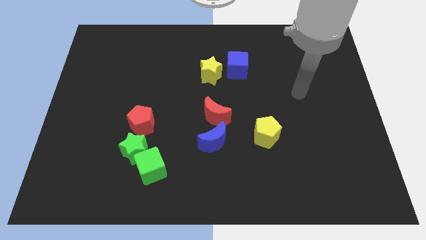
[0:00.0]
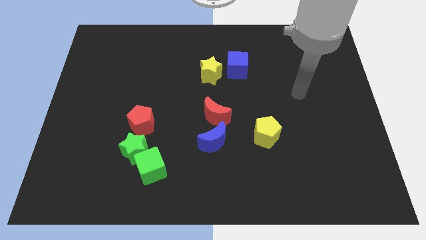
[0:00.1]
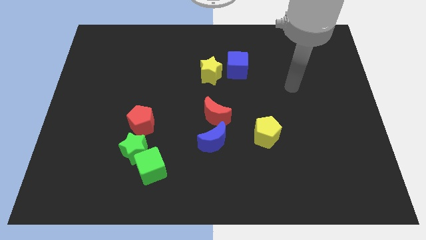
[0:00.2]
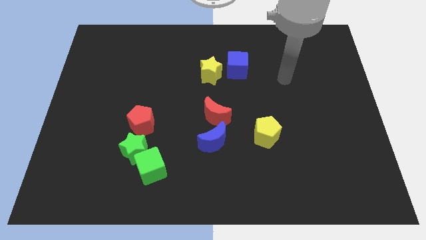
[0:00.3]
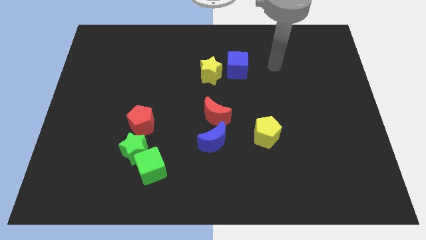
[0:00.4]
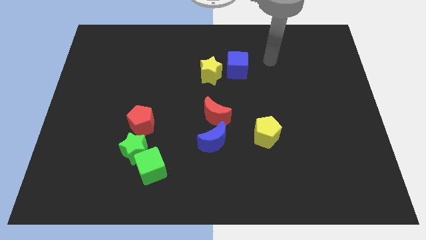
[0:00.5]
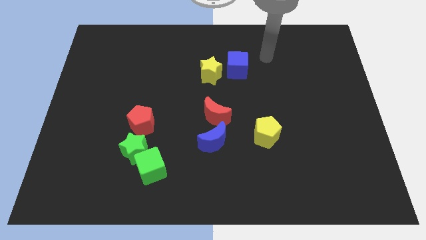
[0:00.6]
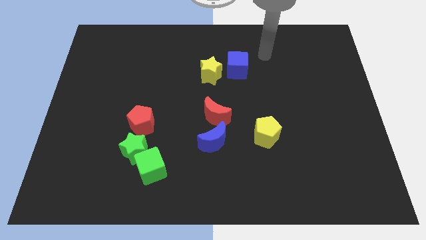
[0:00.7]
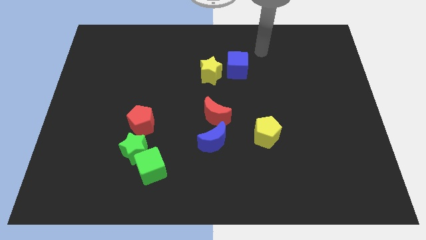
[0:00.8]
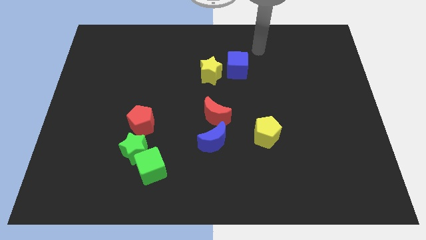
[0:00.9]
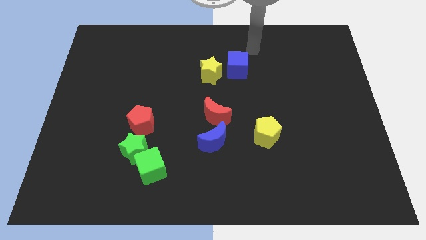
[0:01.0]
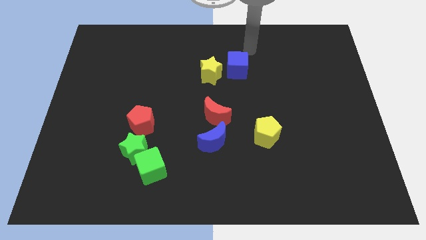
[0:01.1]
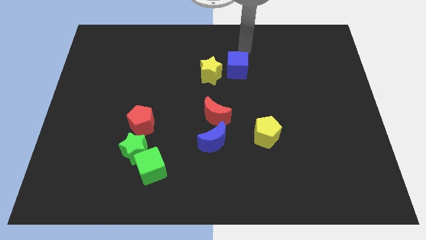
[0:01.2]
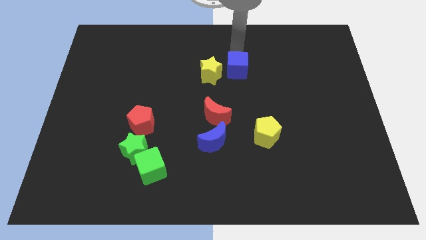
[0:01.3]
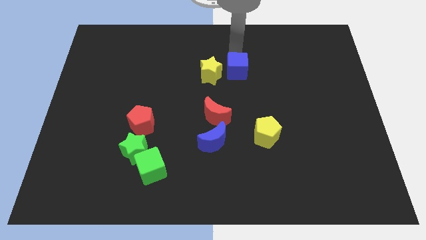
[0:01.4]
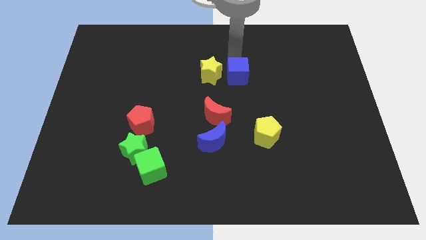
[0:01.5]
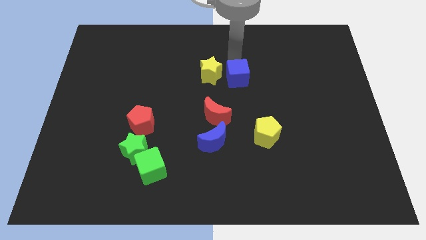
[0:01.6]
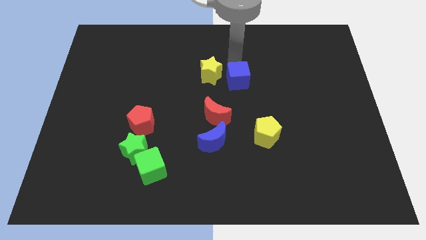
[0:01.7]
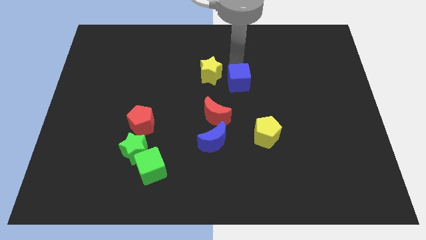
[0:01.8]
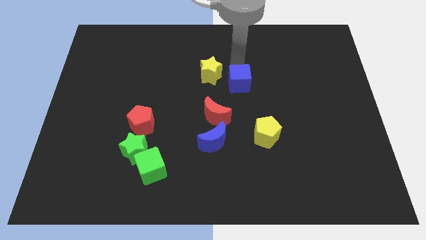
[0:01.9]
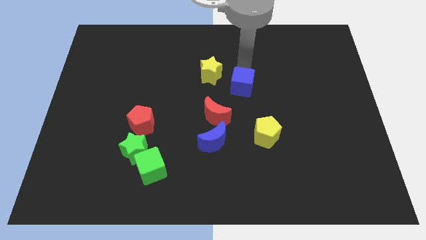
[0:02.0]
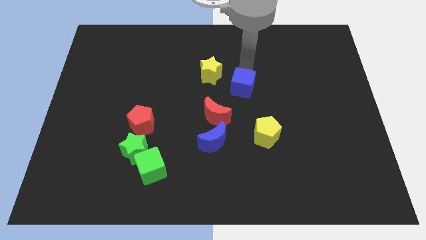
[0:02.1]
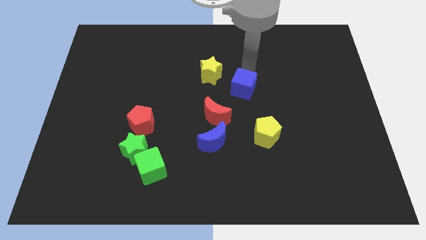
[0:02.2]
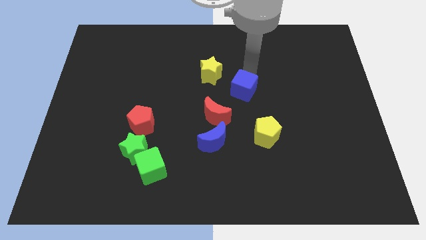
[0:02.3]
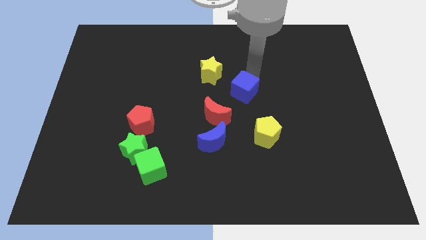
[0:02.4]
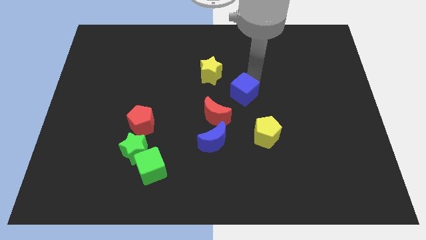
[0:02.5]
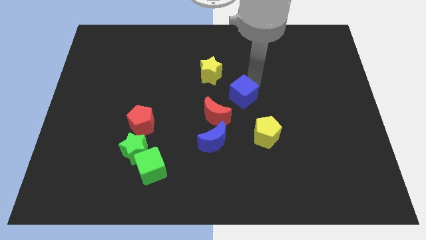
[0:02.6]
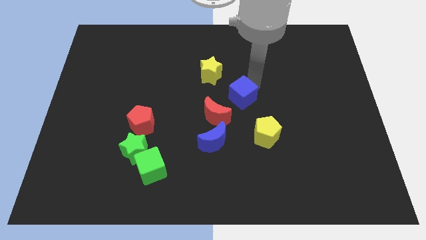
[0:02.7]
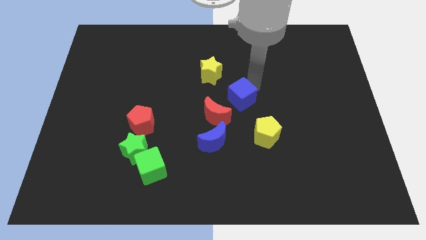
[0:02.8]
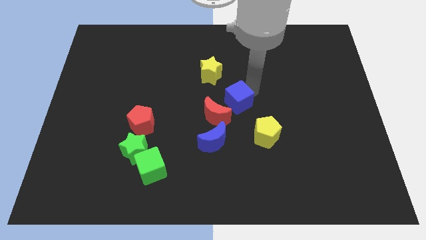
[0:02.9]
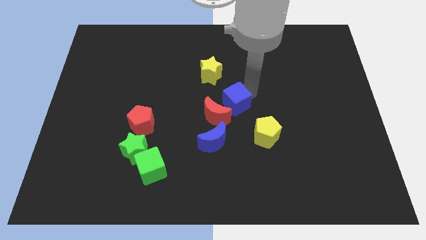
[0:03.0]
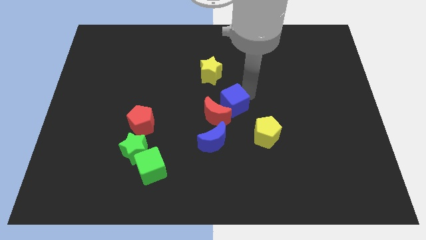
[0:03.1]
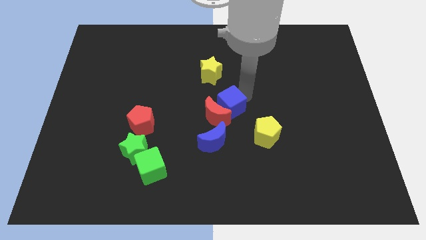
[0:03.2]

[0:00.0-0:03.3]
put the blue cube to the red moon

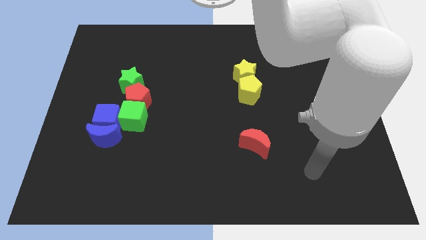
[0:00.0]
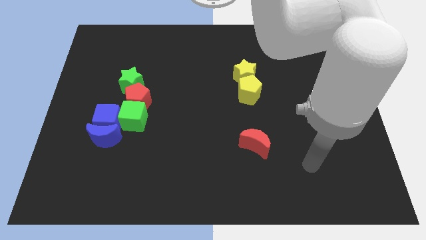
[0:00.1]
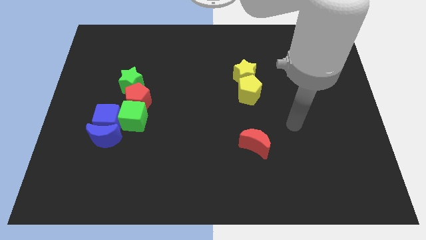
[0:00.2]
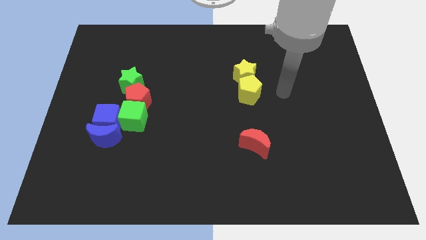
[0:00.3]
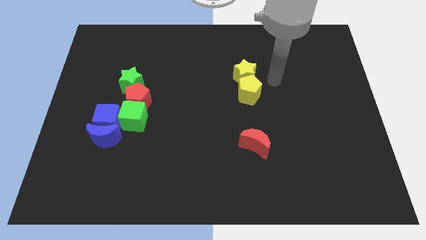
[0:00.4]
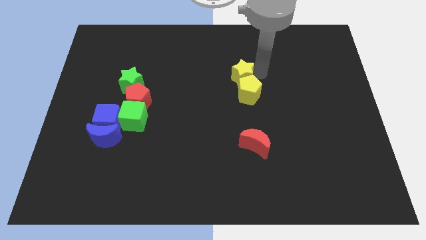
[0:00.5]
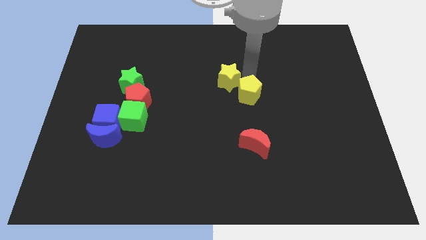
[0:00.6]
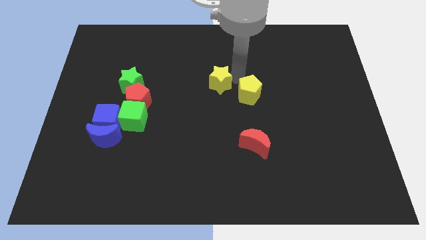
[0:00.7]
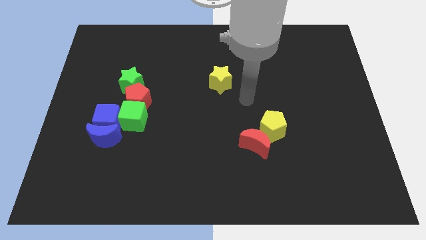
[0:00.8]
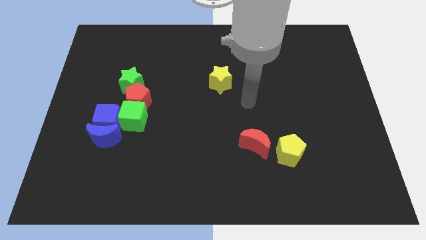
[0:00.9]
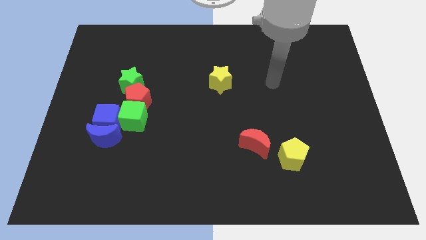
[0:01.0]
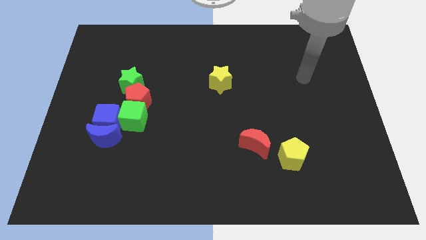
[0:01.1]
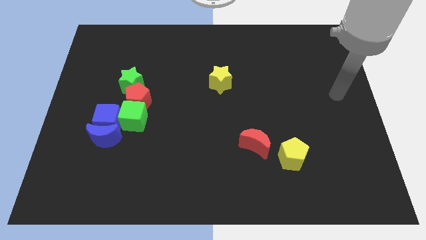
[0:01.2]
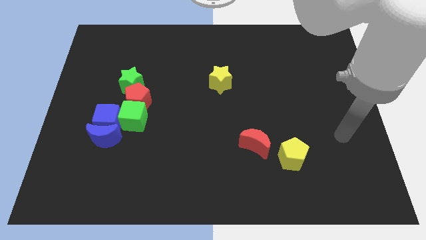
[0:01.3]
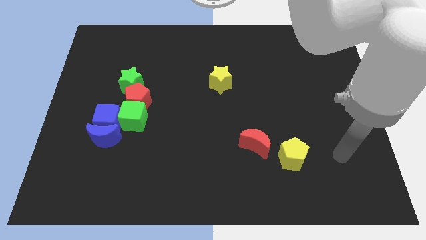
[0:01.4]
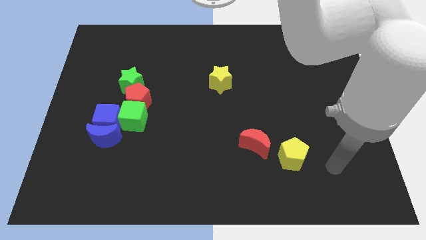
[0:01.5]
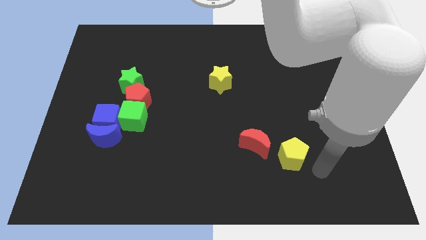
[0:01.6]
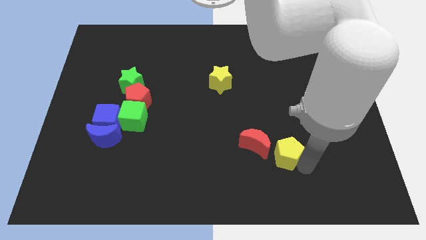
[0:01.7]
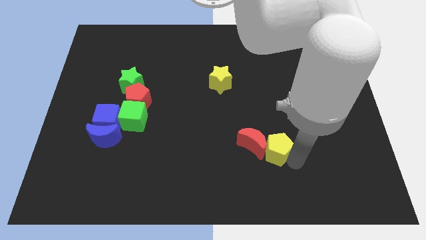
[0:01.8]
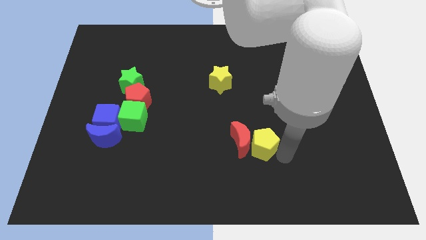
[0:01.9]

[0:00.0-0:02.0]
put the yellow pentagon next to the red moon

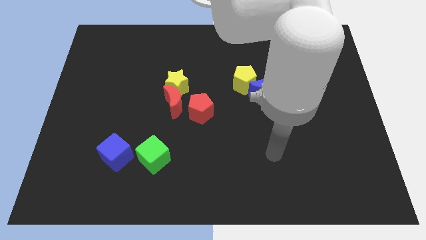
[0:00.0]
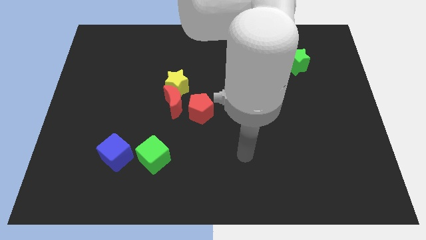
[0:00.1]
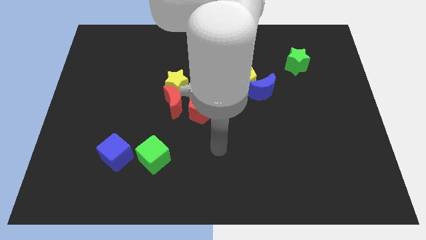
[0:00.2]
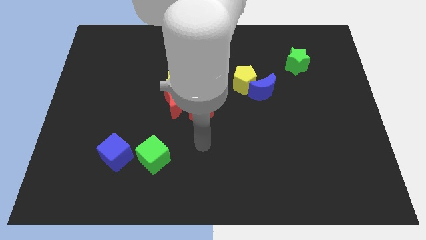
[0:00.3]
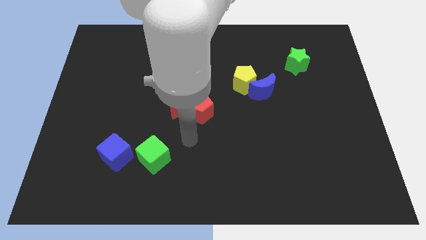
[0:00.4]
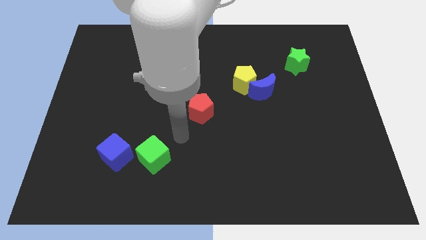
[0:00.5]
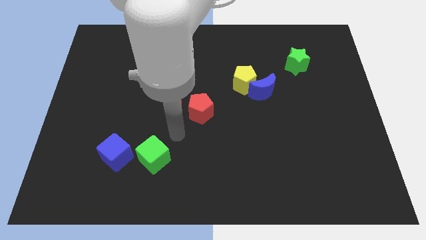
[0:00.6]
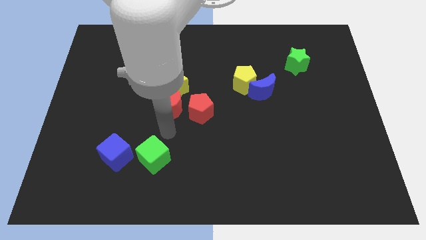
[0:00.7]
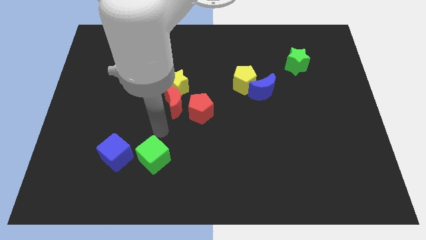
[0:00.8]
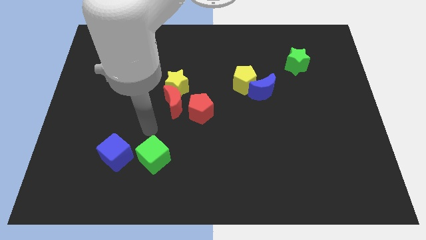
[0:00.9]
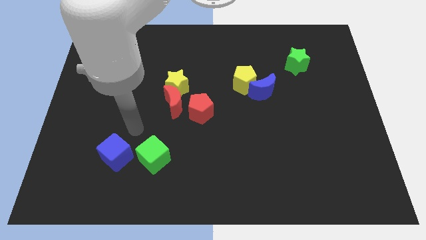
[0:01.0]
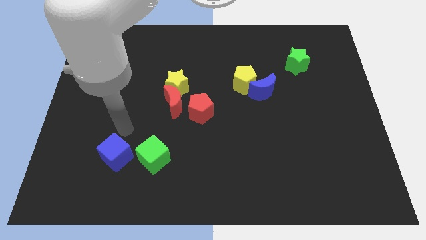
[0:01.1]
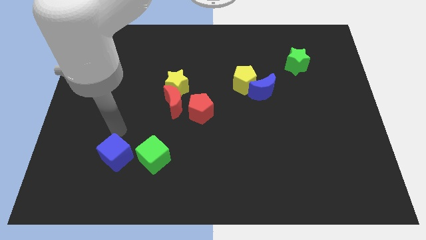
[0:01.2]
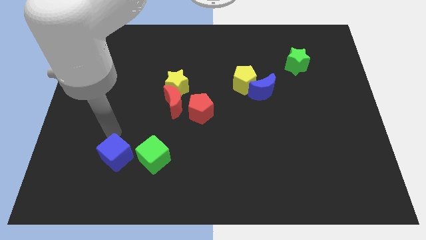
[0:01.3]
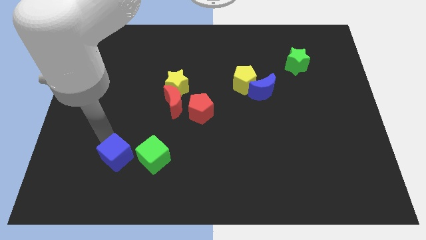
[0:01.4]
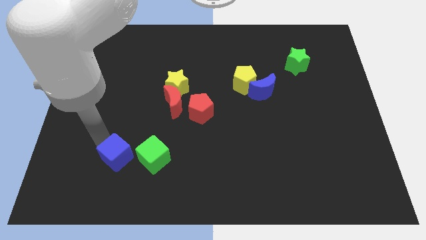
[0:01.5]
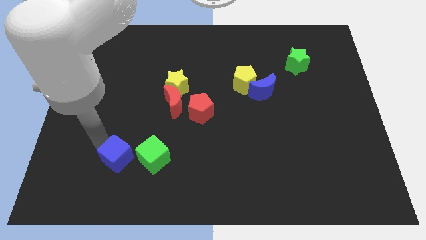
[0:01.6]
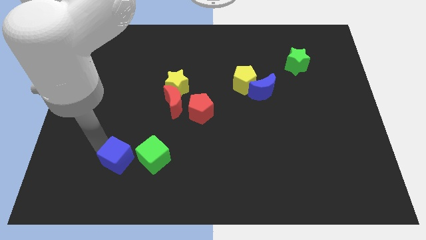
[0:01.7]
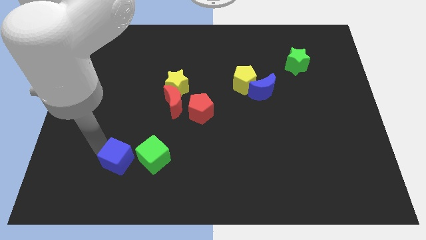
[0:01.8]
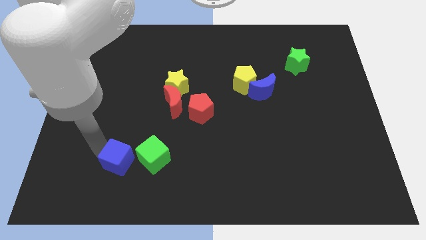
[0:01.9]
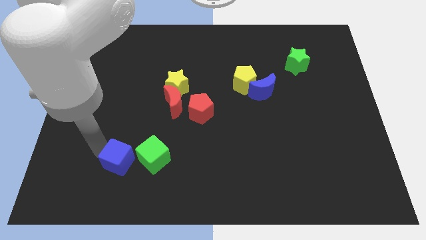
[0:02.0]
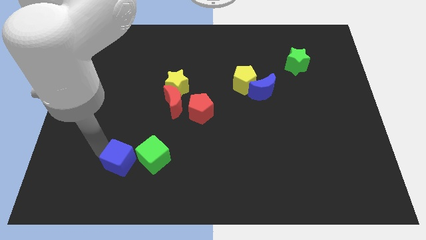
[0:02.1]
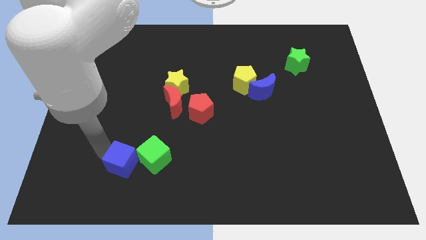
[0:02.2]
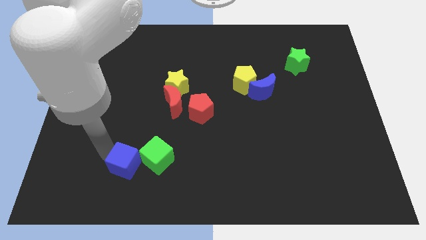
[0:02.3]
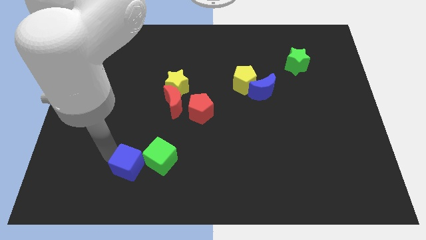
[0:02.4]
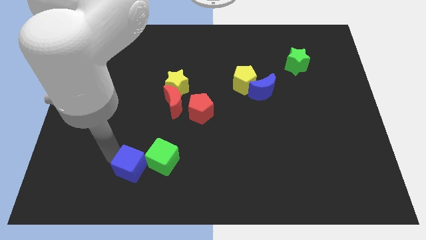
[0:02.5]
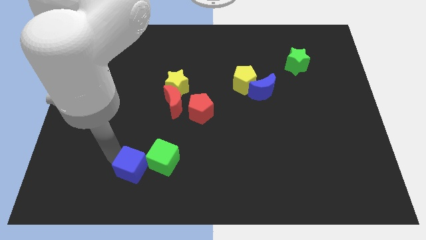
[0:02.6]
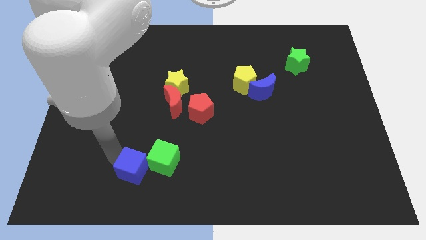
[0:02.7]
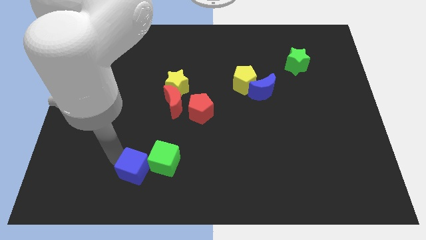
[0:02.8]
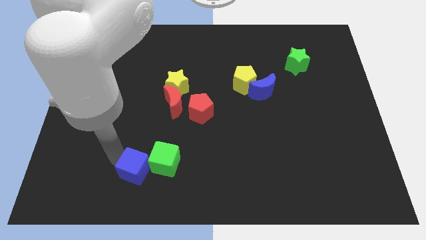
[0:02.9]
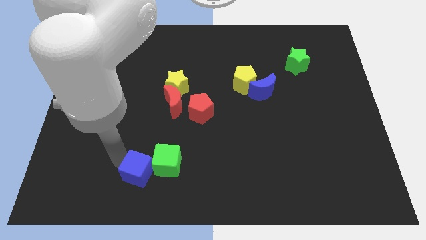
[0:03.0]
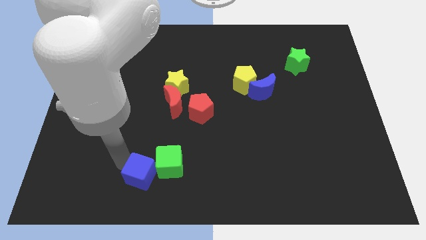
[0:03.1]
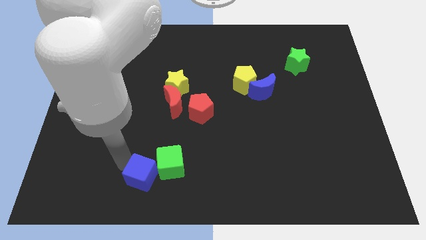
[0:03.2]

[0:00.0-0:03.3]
move the blue cube close to the green cube

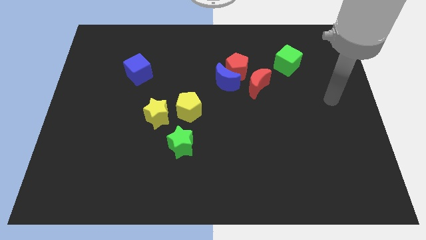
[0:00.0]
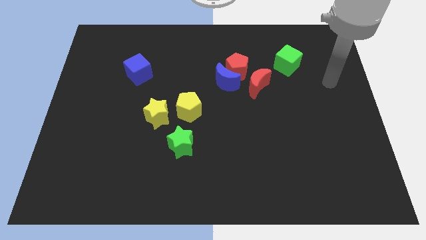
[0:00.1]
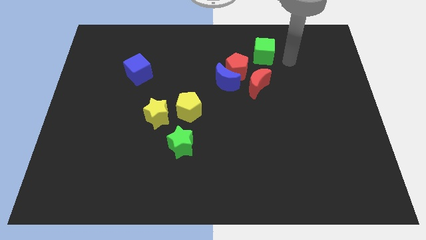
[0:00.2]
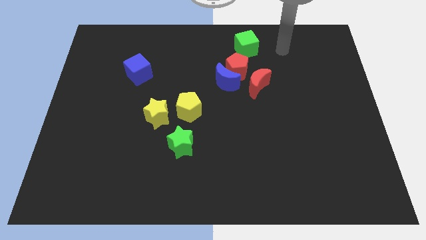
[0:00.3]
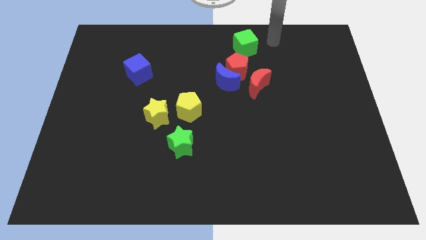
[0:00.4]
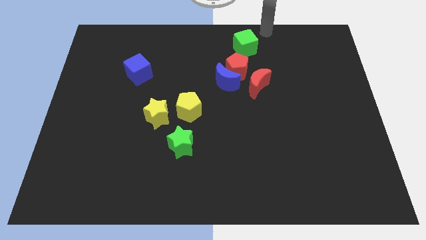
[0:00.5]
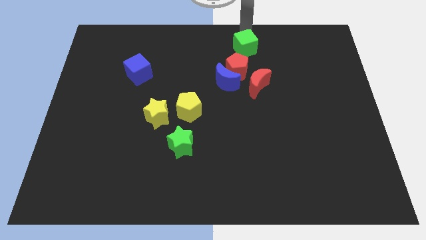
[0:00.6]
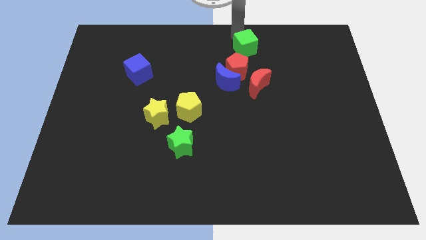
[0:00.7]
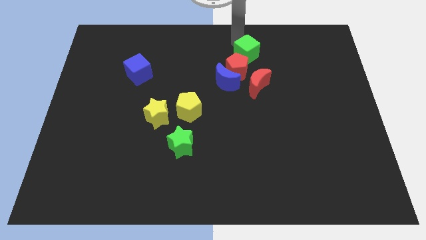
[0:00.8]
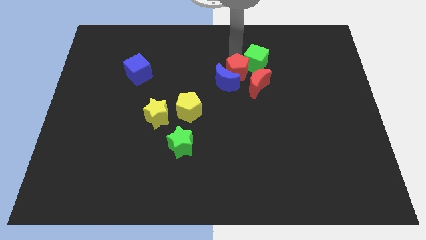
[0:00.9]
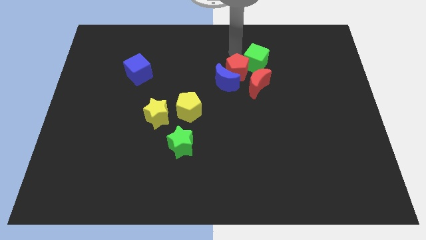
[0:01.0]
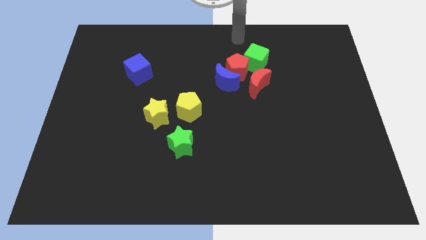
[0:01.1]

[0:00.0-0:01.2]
push the green cube close to the red pentagon
